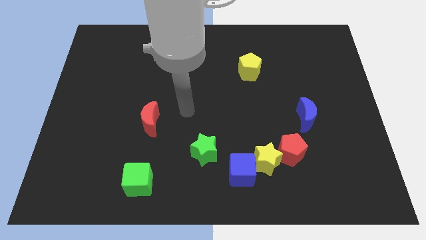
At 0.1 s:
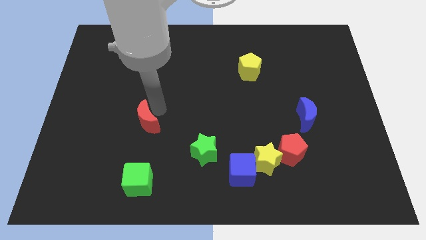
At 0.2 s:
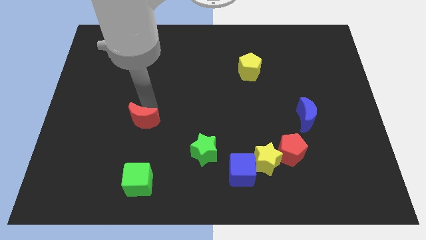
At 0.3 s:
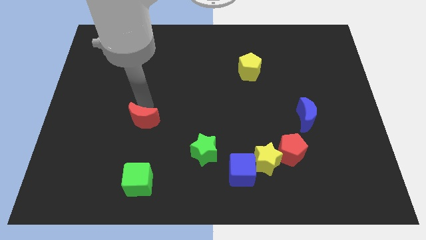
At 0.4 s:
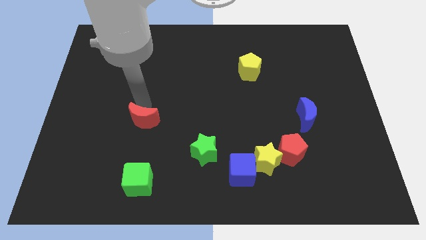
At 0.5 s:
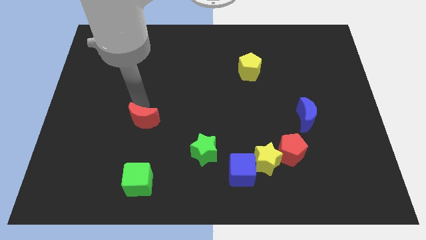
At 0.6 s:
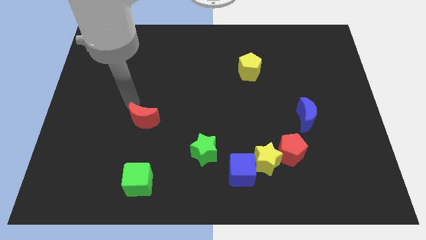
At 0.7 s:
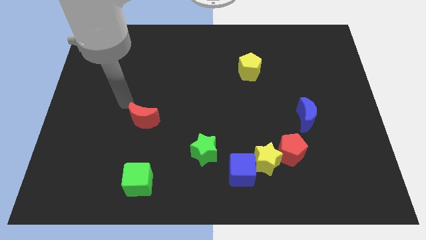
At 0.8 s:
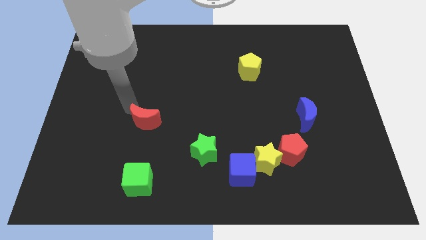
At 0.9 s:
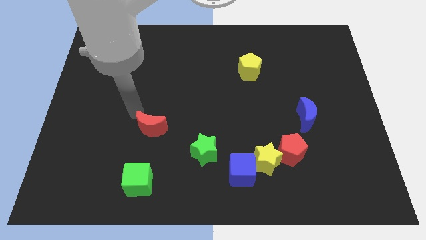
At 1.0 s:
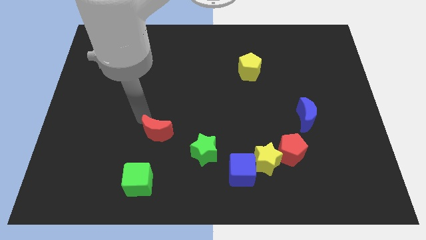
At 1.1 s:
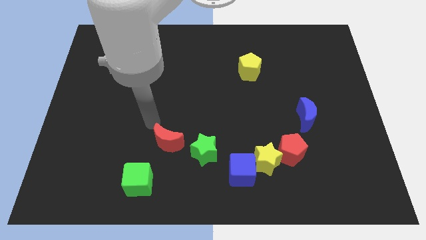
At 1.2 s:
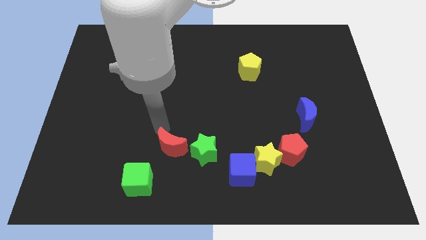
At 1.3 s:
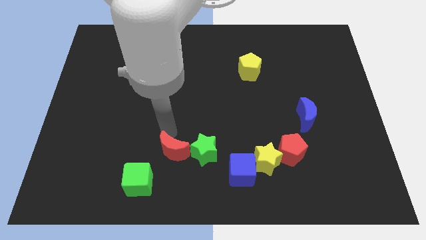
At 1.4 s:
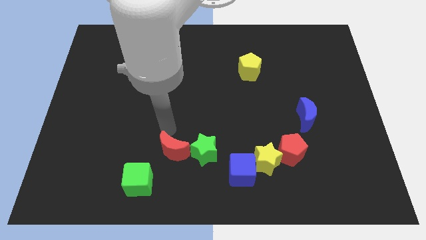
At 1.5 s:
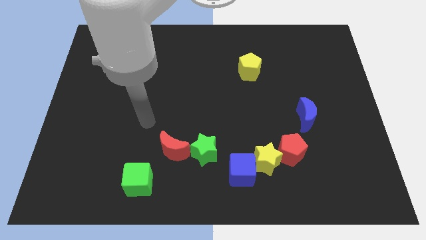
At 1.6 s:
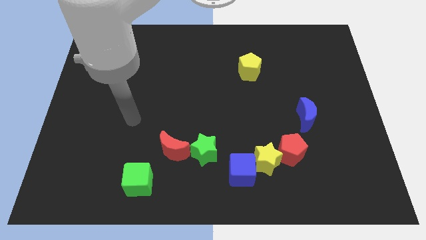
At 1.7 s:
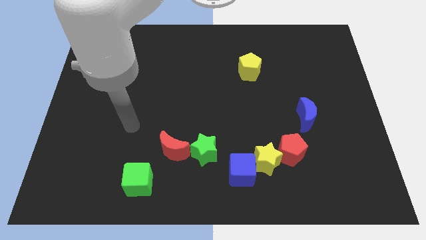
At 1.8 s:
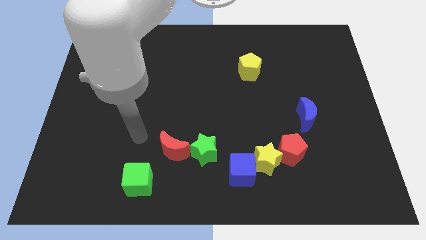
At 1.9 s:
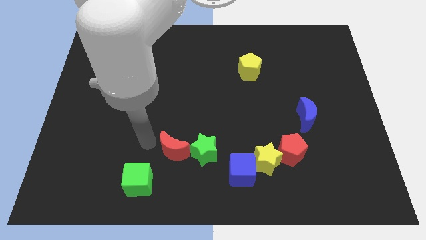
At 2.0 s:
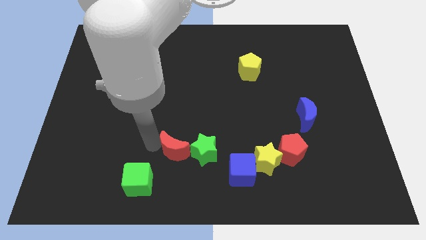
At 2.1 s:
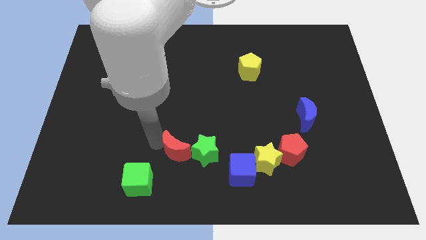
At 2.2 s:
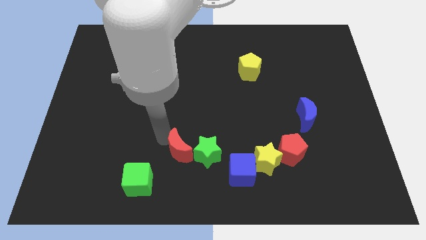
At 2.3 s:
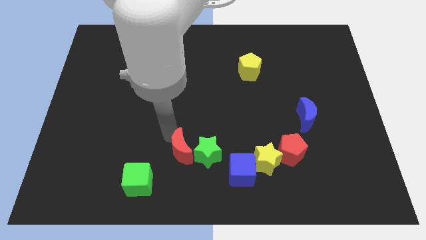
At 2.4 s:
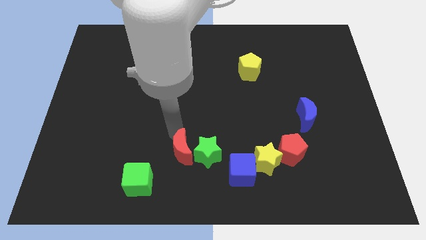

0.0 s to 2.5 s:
slide the red moon to the green star

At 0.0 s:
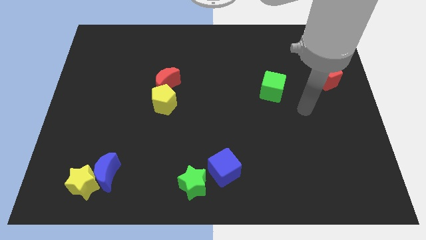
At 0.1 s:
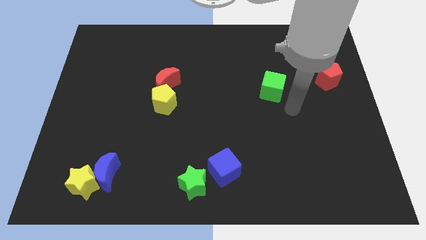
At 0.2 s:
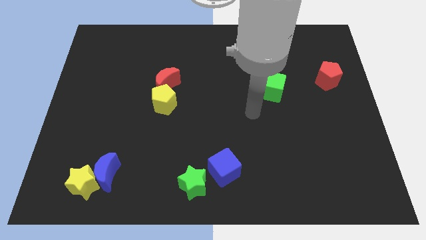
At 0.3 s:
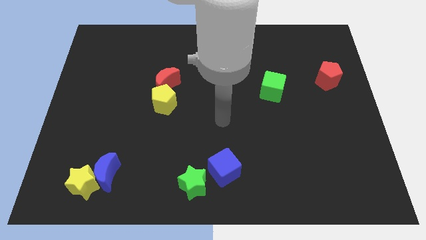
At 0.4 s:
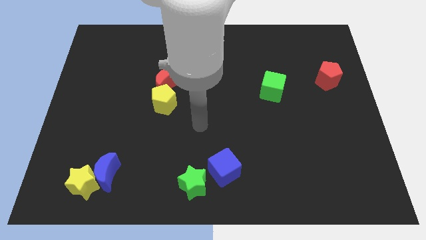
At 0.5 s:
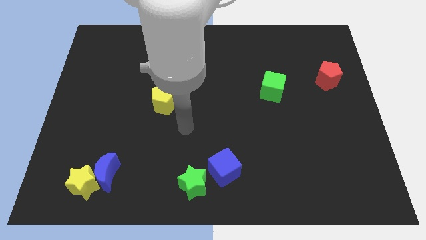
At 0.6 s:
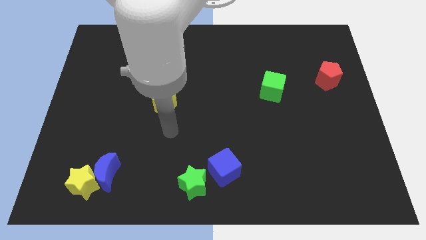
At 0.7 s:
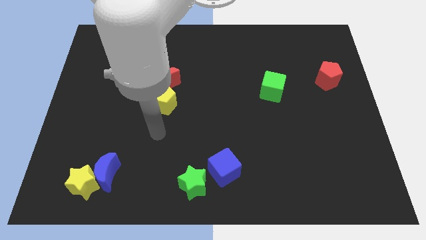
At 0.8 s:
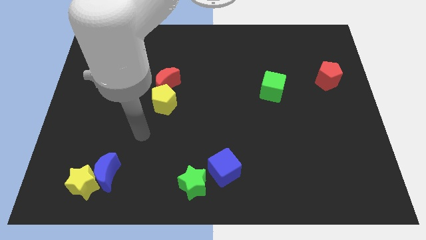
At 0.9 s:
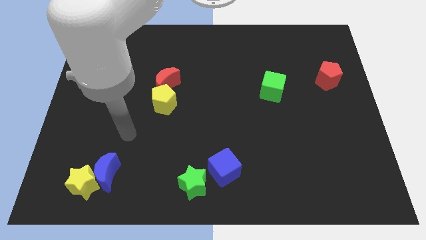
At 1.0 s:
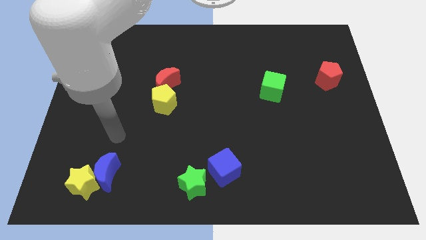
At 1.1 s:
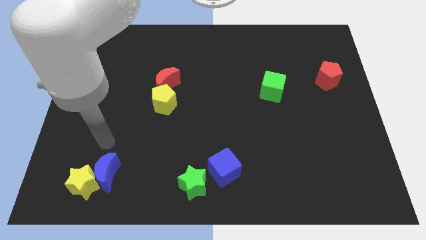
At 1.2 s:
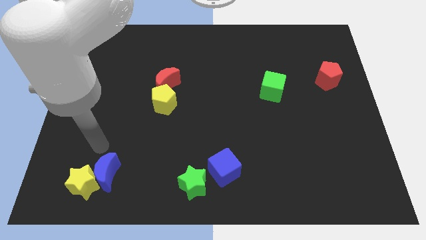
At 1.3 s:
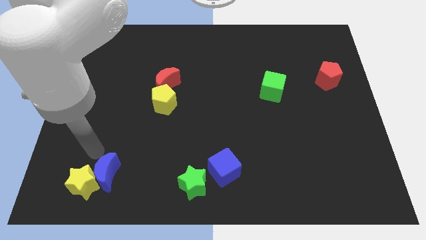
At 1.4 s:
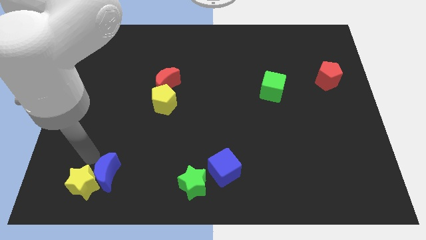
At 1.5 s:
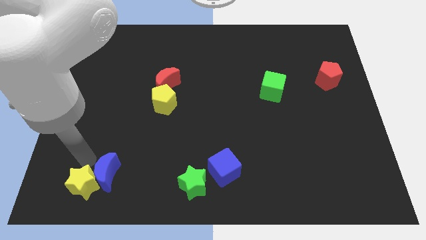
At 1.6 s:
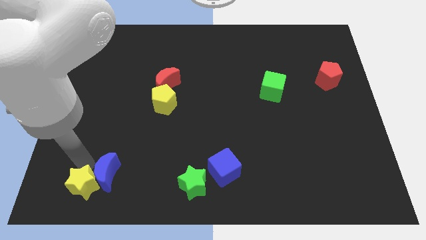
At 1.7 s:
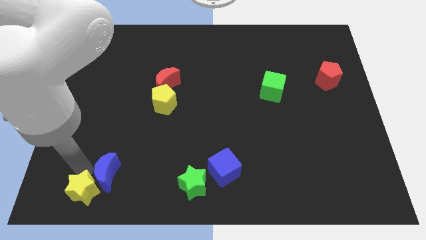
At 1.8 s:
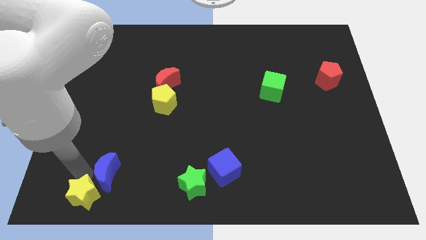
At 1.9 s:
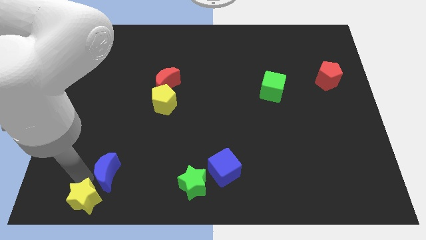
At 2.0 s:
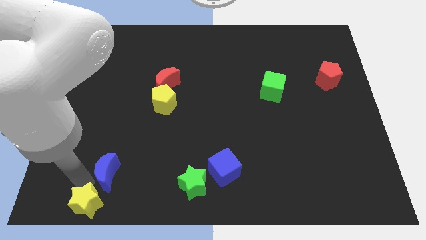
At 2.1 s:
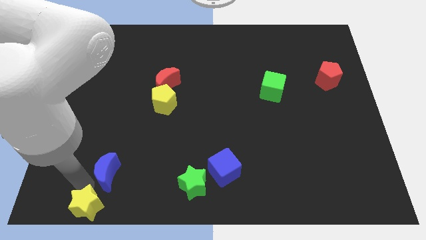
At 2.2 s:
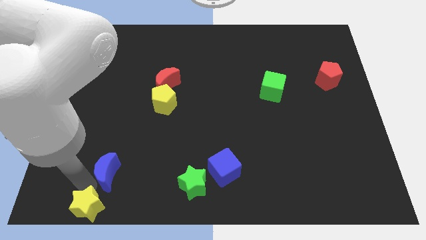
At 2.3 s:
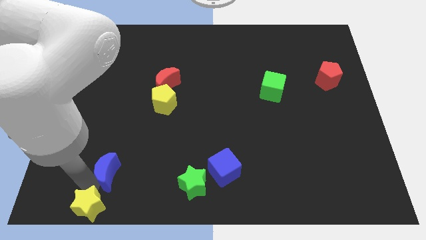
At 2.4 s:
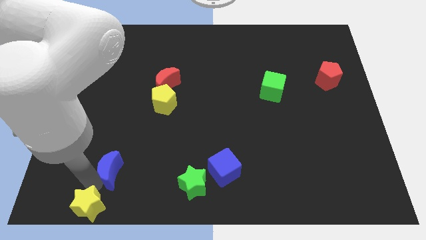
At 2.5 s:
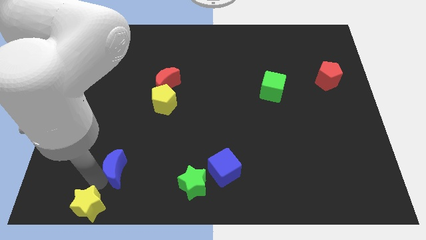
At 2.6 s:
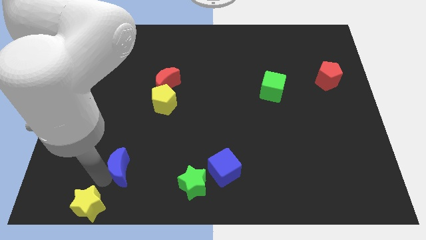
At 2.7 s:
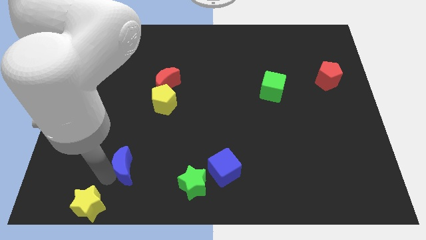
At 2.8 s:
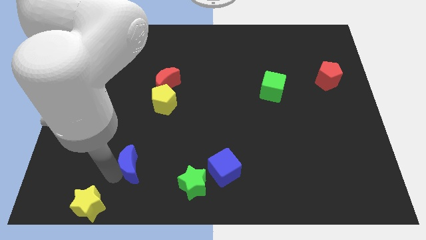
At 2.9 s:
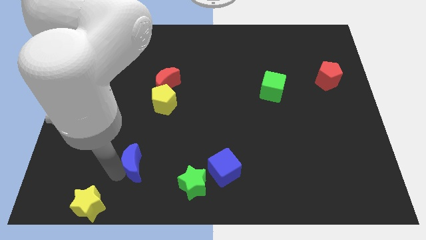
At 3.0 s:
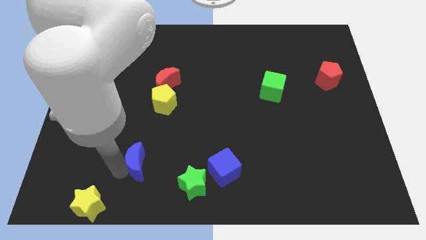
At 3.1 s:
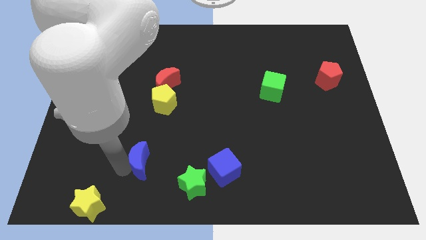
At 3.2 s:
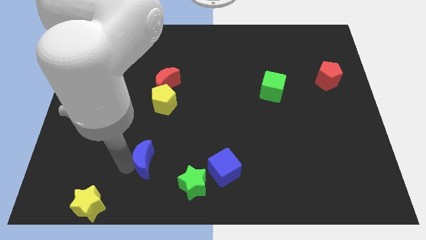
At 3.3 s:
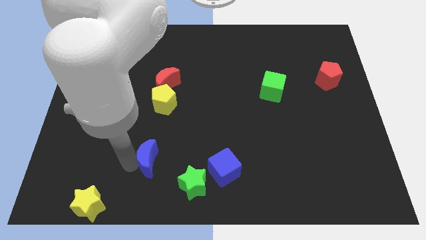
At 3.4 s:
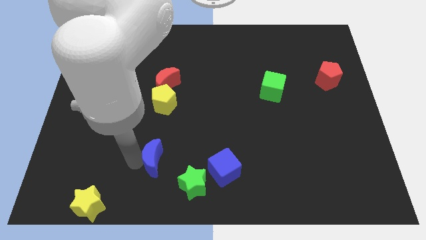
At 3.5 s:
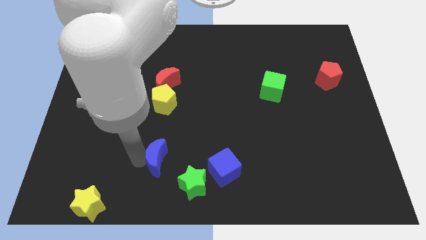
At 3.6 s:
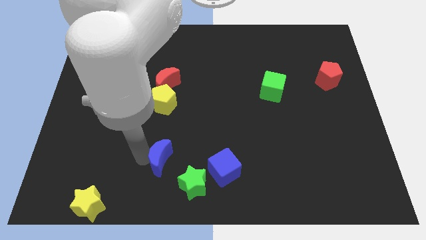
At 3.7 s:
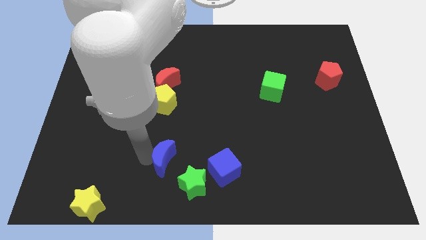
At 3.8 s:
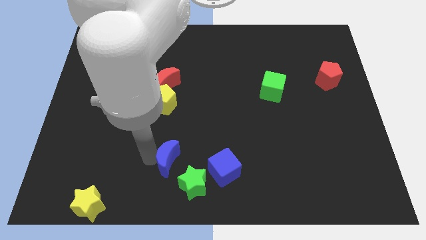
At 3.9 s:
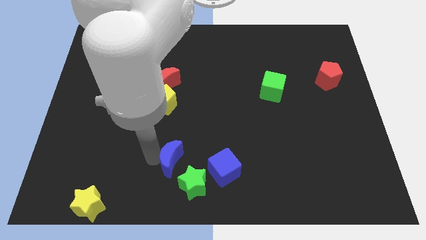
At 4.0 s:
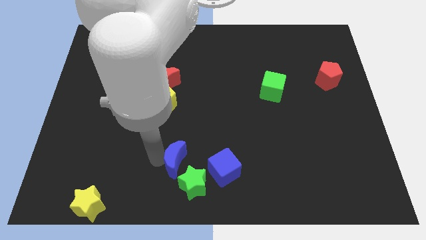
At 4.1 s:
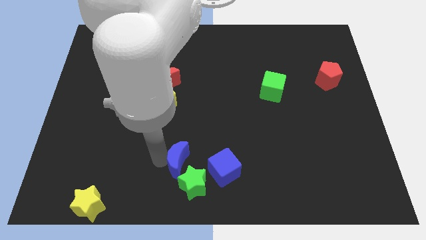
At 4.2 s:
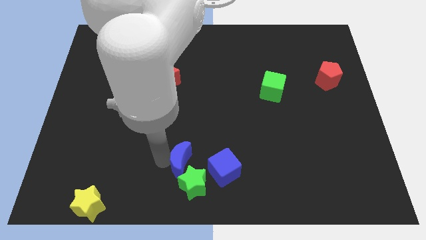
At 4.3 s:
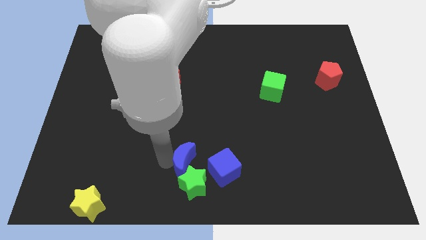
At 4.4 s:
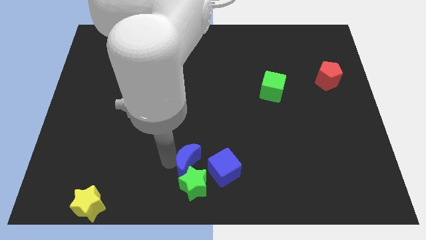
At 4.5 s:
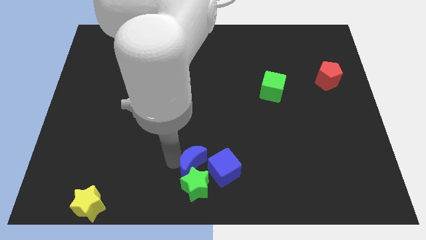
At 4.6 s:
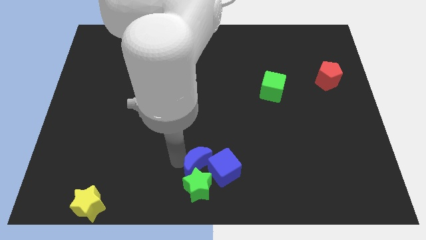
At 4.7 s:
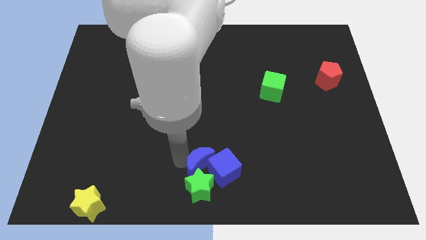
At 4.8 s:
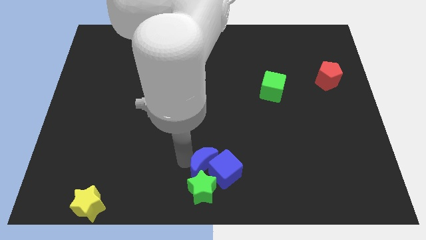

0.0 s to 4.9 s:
put the blue moon next to the blue cube

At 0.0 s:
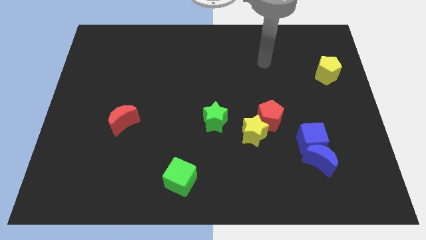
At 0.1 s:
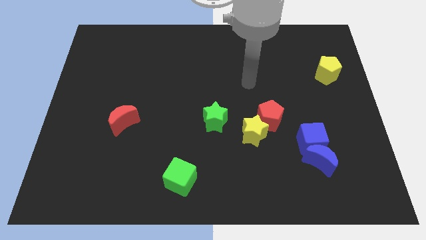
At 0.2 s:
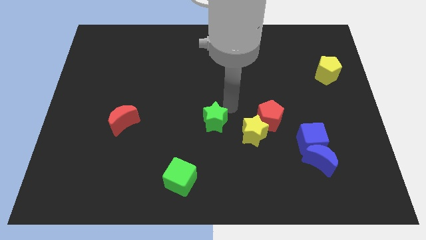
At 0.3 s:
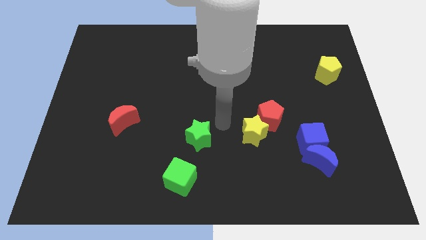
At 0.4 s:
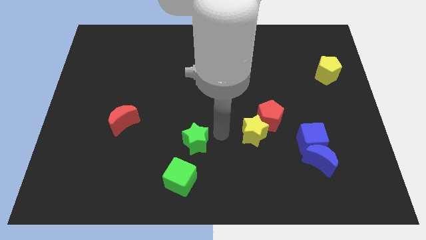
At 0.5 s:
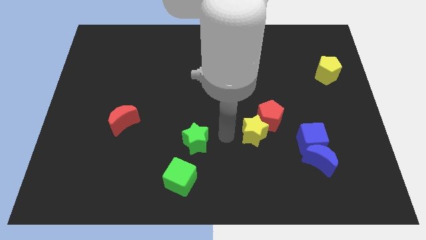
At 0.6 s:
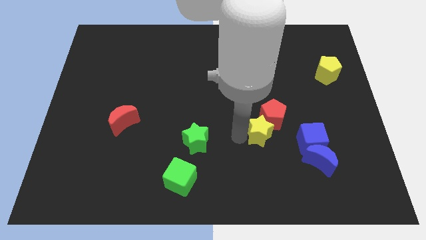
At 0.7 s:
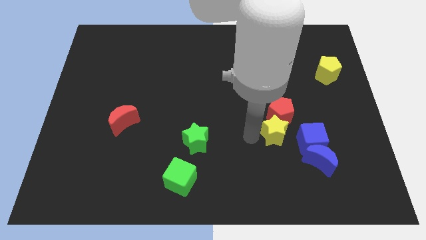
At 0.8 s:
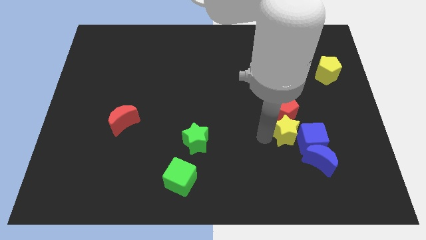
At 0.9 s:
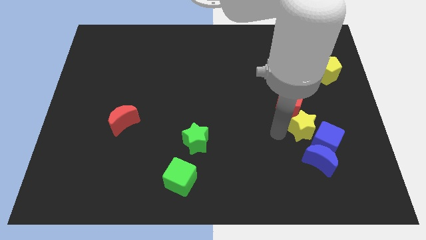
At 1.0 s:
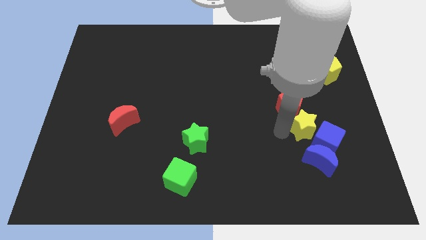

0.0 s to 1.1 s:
slide the yellow star close to the blue cube

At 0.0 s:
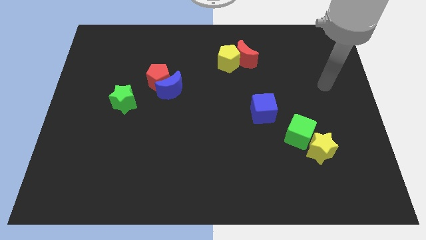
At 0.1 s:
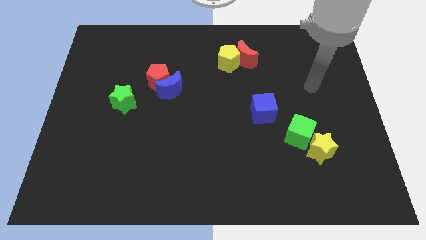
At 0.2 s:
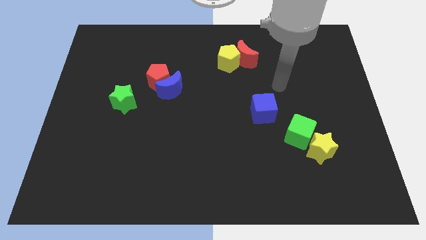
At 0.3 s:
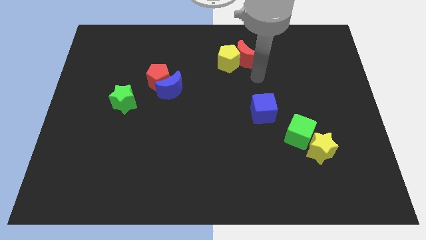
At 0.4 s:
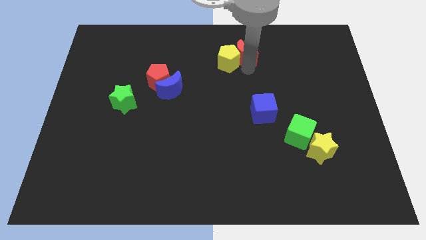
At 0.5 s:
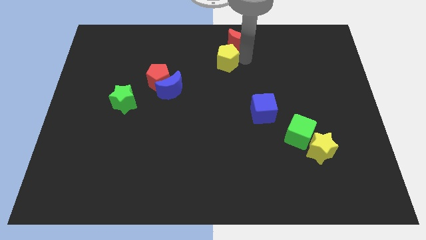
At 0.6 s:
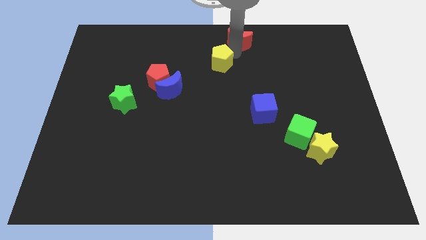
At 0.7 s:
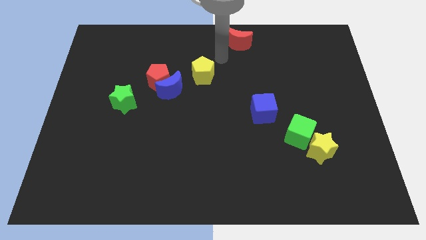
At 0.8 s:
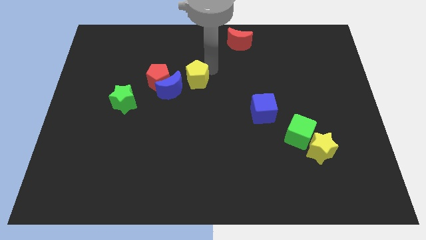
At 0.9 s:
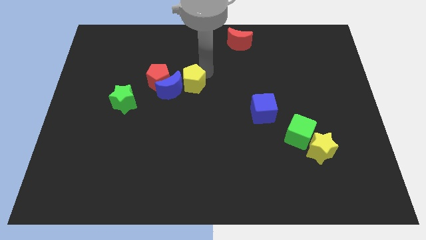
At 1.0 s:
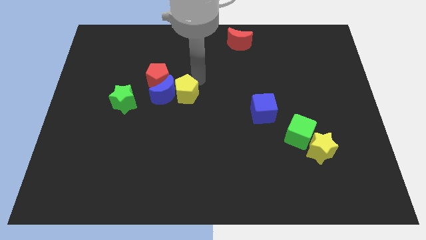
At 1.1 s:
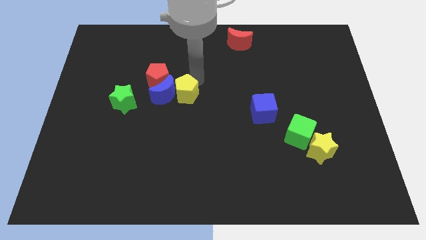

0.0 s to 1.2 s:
move the yellow pentagon to the blue moon
